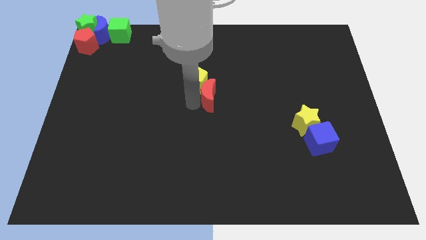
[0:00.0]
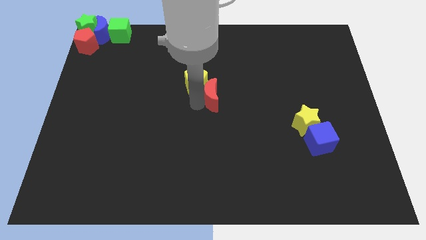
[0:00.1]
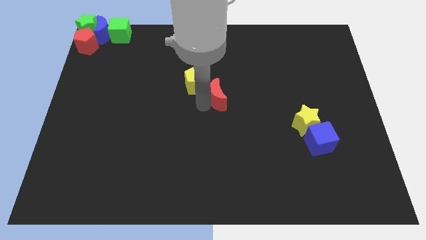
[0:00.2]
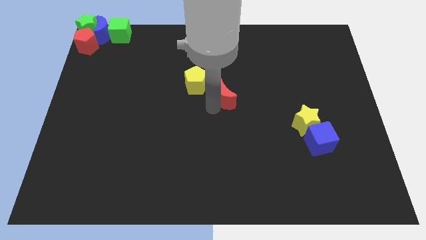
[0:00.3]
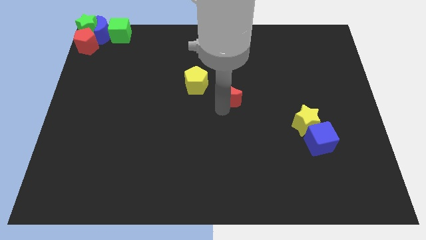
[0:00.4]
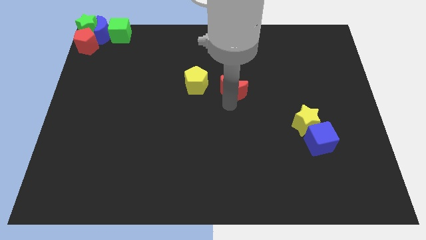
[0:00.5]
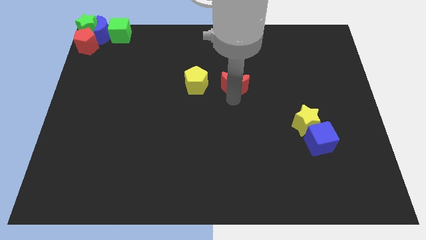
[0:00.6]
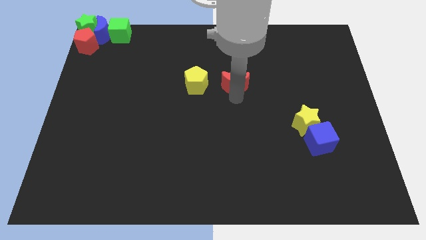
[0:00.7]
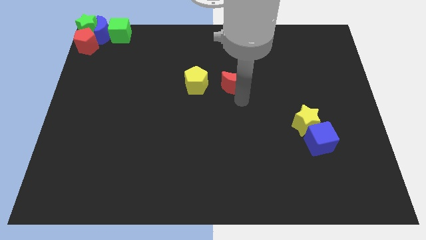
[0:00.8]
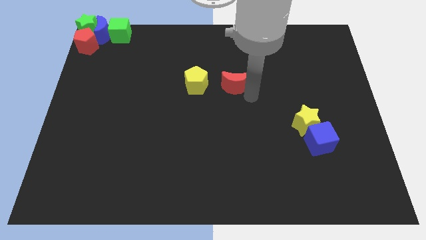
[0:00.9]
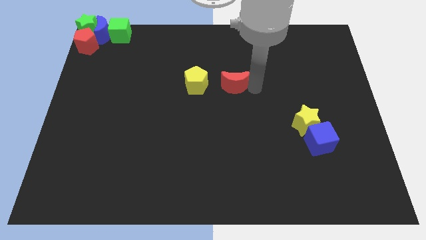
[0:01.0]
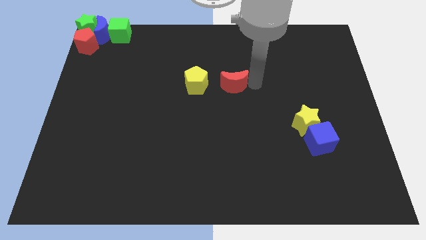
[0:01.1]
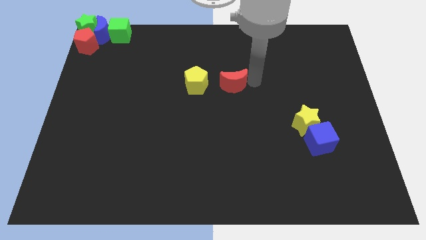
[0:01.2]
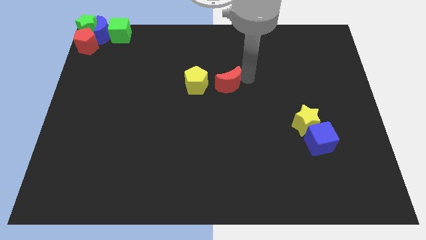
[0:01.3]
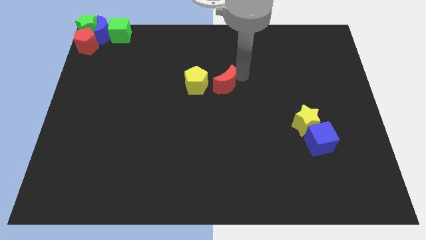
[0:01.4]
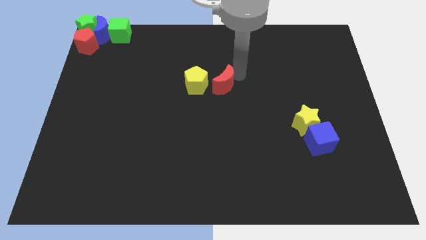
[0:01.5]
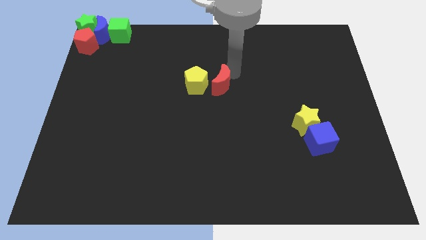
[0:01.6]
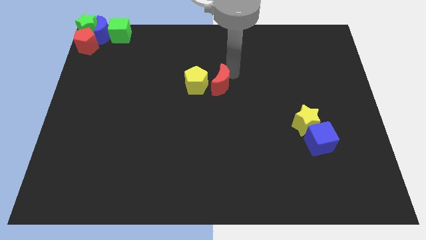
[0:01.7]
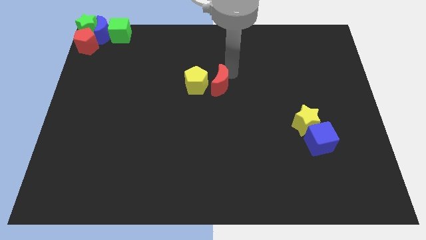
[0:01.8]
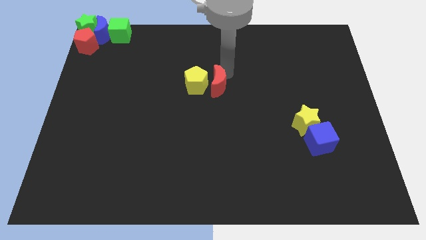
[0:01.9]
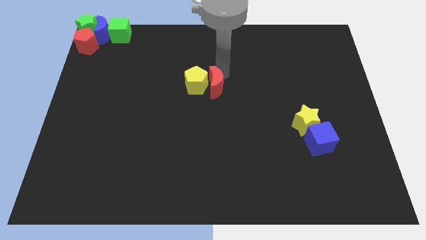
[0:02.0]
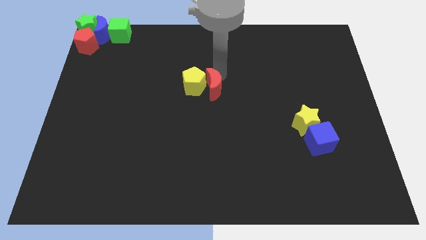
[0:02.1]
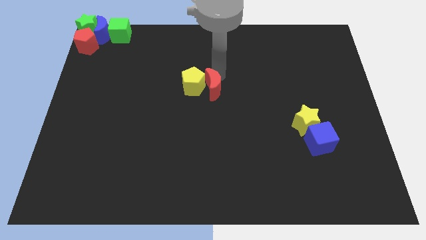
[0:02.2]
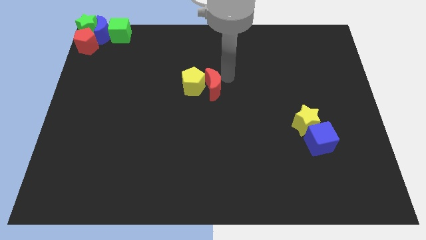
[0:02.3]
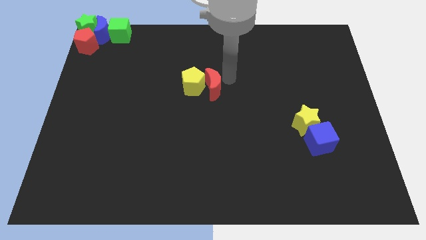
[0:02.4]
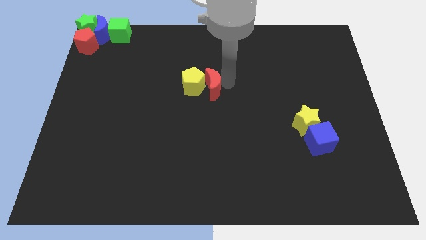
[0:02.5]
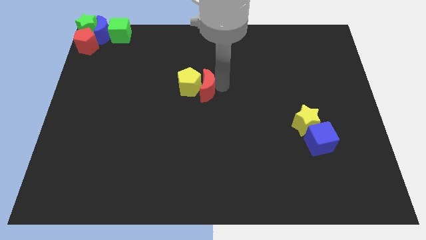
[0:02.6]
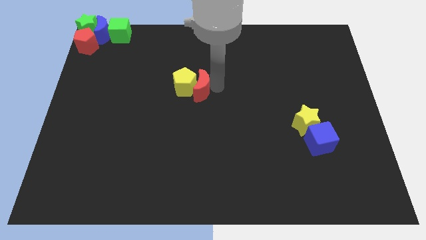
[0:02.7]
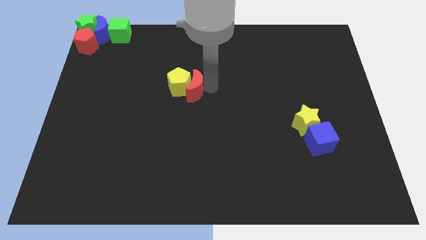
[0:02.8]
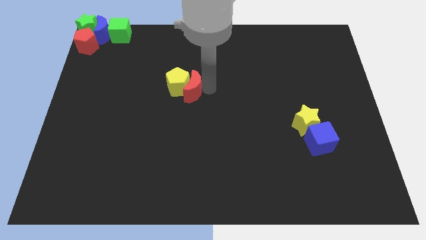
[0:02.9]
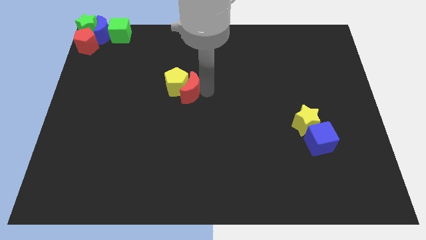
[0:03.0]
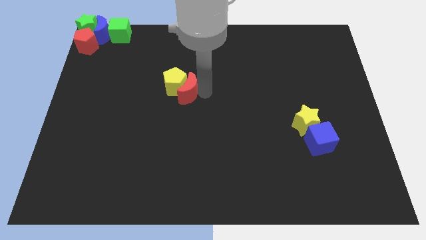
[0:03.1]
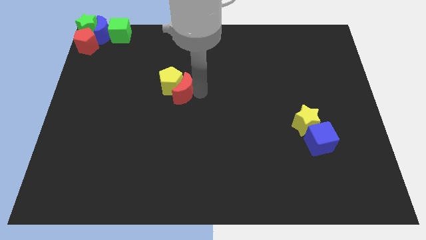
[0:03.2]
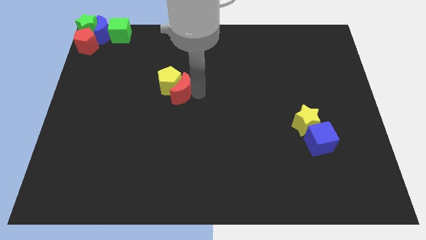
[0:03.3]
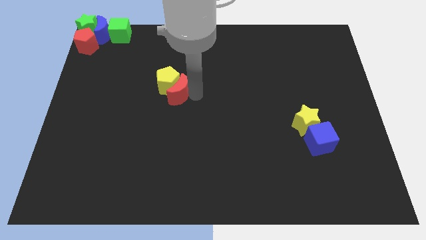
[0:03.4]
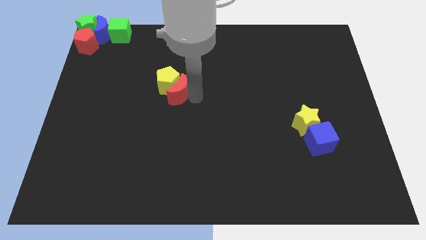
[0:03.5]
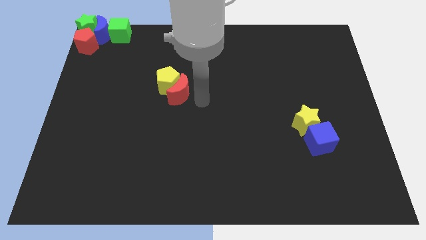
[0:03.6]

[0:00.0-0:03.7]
push the red moon into the yellow pentagon

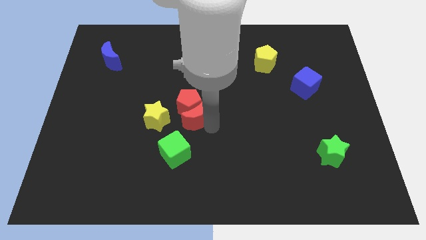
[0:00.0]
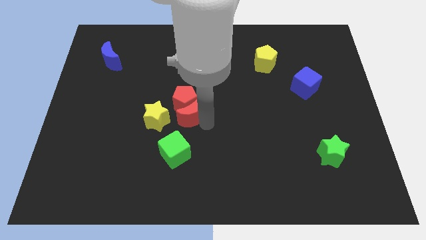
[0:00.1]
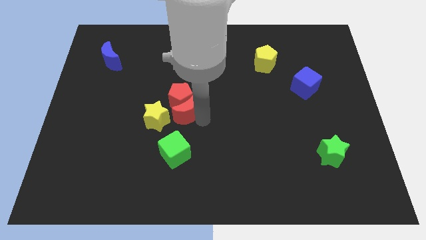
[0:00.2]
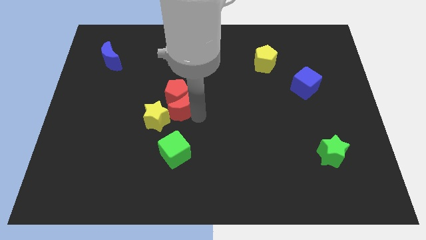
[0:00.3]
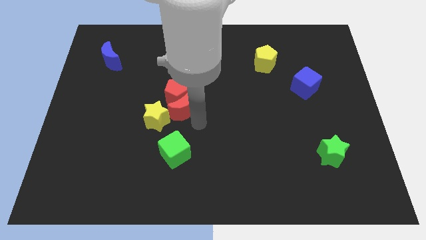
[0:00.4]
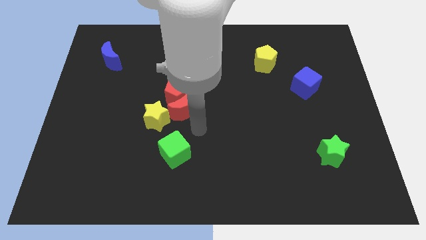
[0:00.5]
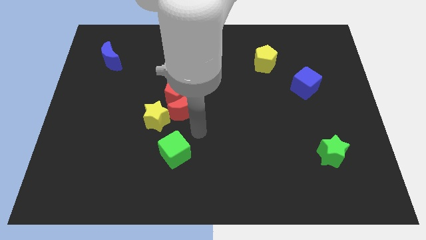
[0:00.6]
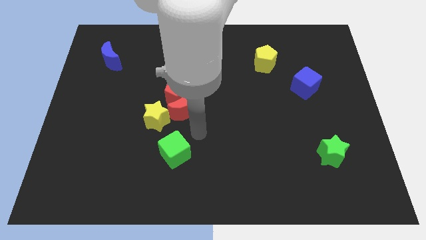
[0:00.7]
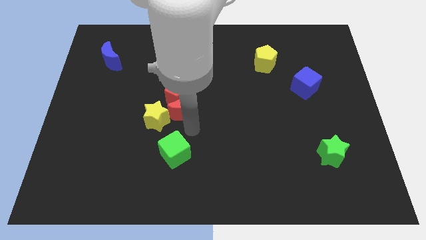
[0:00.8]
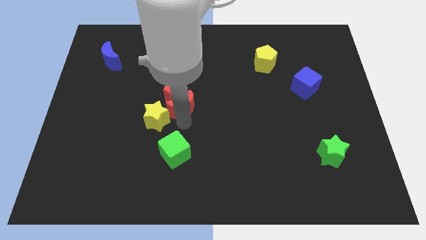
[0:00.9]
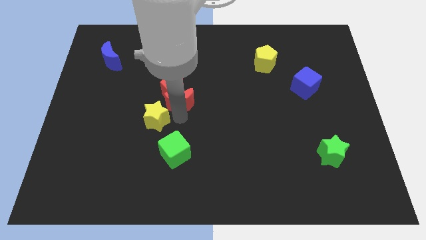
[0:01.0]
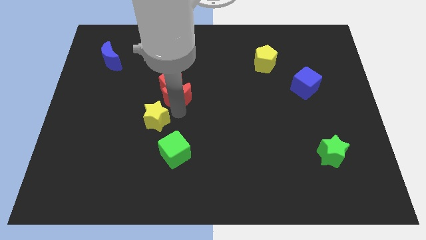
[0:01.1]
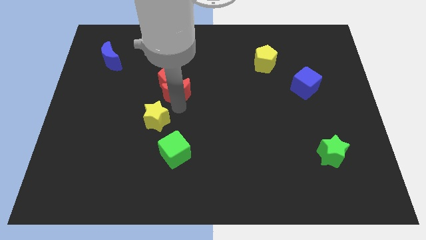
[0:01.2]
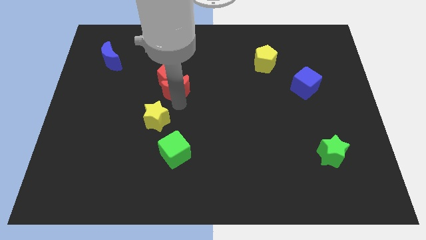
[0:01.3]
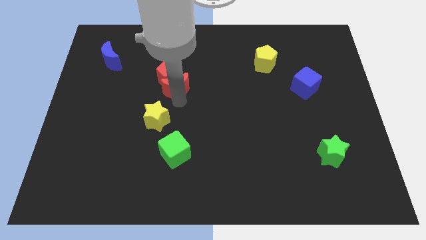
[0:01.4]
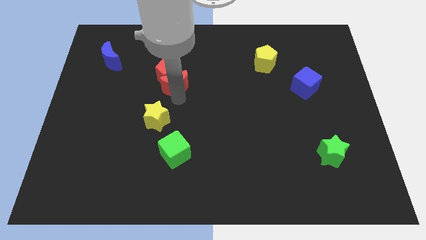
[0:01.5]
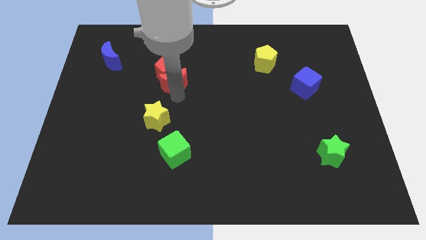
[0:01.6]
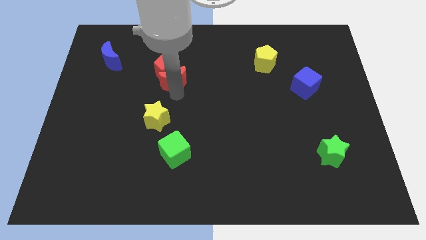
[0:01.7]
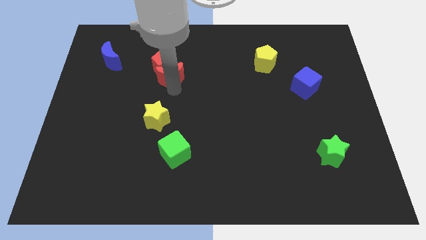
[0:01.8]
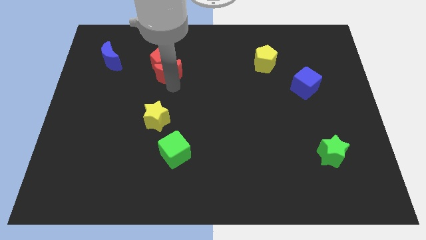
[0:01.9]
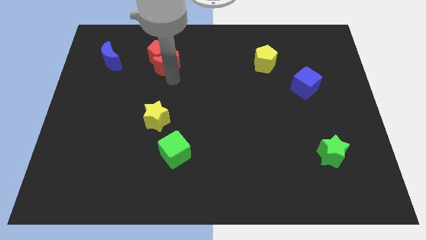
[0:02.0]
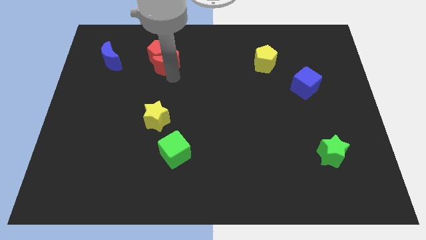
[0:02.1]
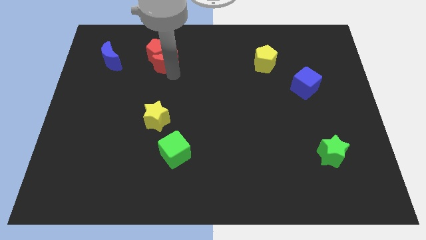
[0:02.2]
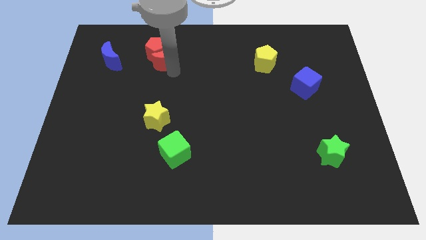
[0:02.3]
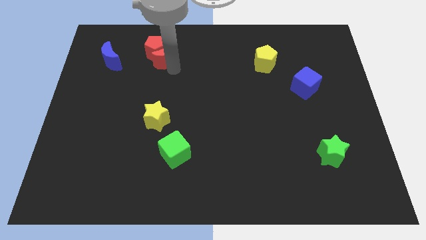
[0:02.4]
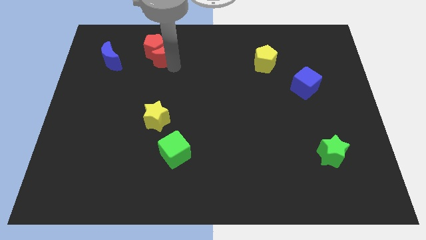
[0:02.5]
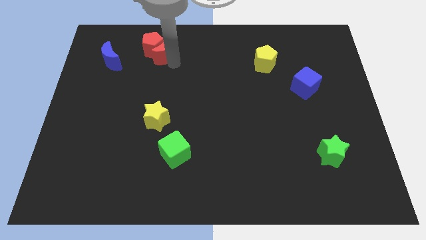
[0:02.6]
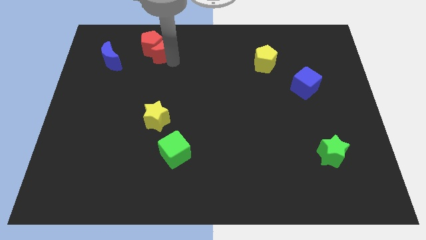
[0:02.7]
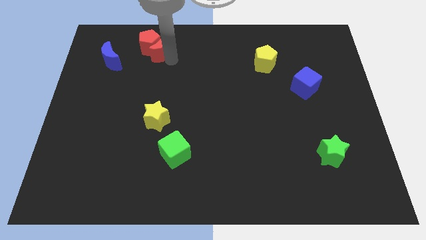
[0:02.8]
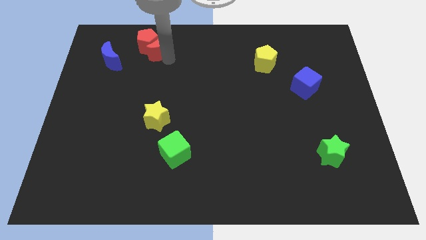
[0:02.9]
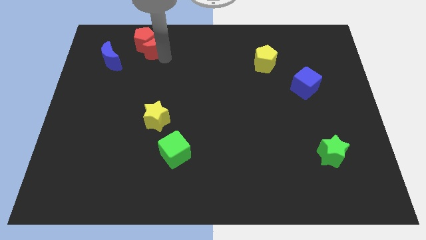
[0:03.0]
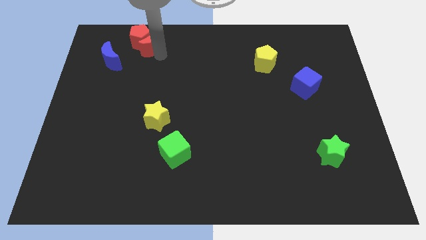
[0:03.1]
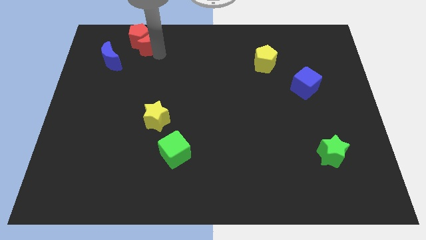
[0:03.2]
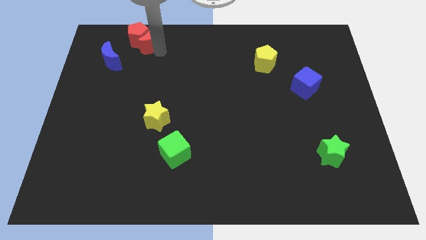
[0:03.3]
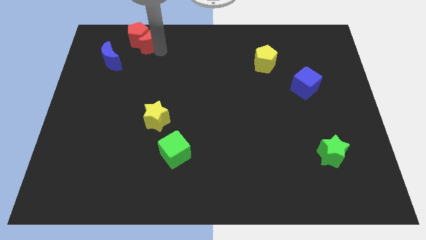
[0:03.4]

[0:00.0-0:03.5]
place the red blocks at the top left side of the board

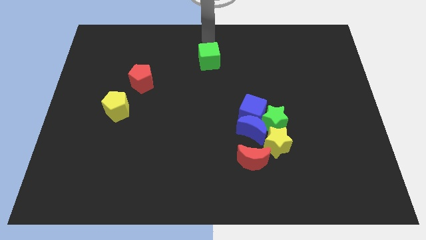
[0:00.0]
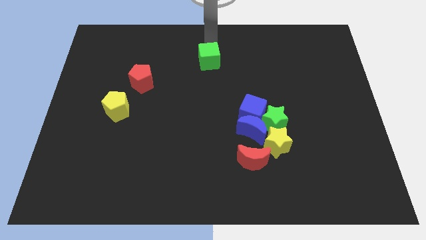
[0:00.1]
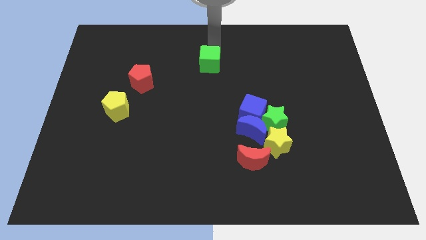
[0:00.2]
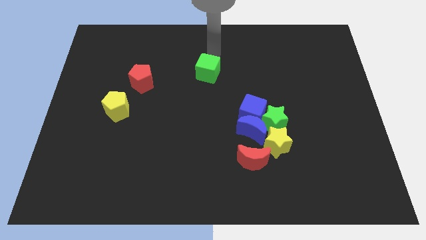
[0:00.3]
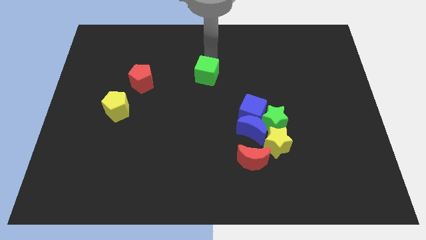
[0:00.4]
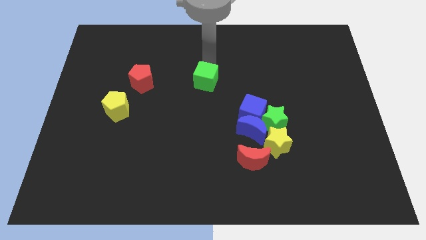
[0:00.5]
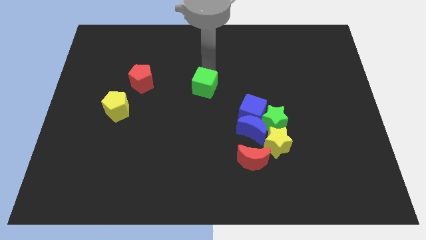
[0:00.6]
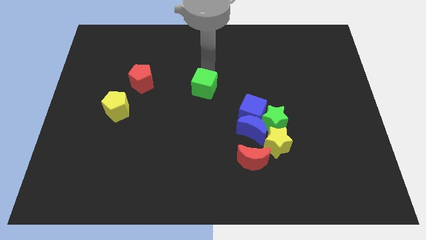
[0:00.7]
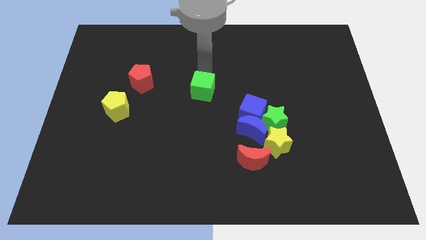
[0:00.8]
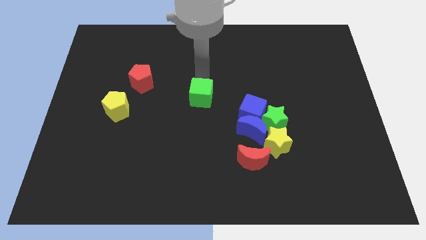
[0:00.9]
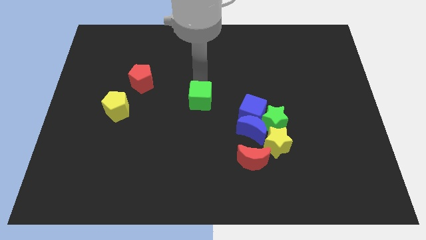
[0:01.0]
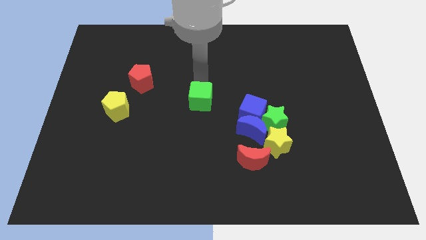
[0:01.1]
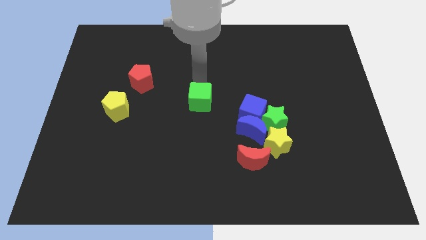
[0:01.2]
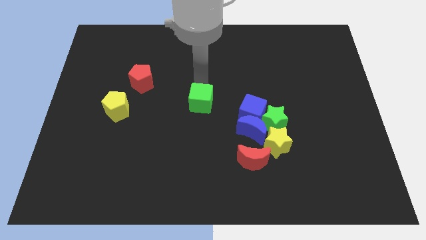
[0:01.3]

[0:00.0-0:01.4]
push the green cube to the bottom of the board

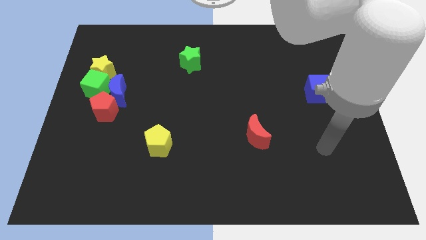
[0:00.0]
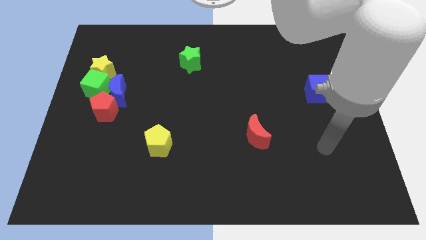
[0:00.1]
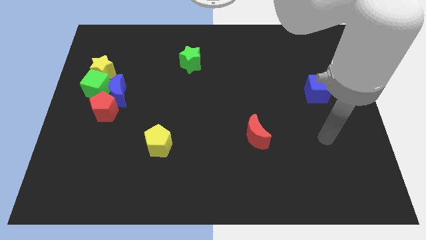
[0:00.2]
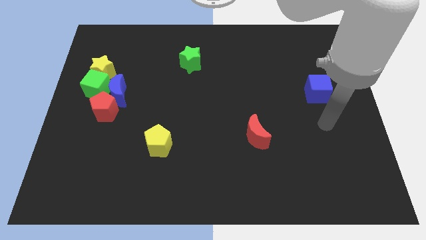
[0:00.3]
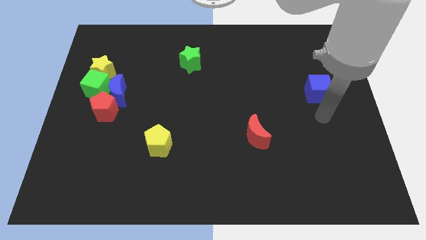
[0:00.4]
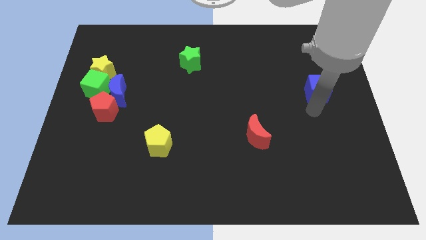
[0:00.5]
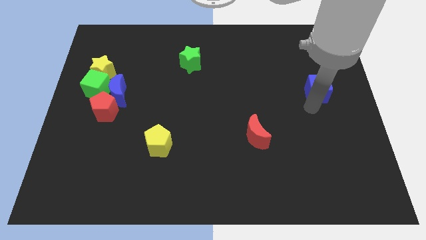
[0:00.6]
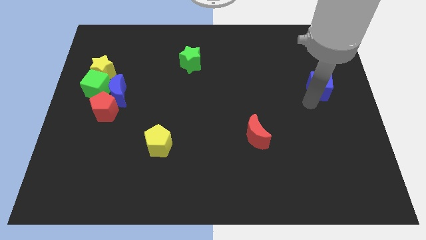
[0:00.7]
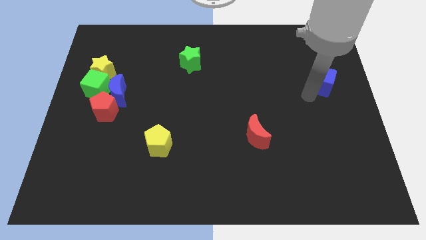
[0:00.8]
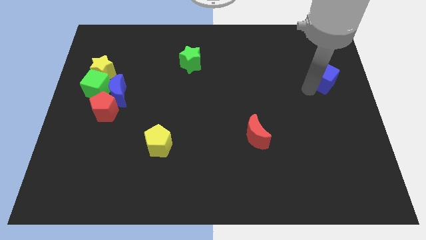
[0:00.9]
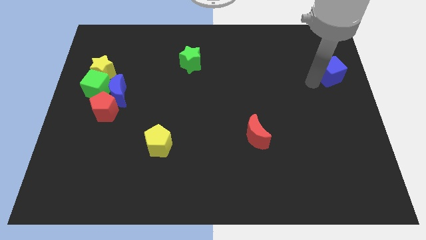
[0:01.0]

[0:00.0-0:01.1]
move the blue cube slightly towards the top right of the board
